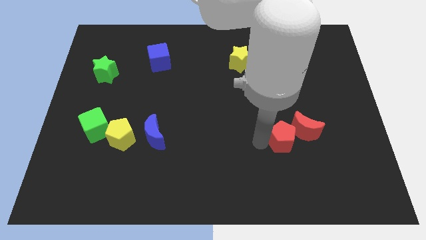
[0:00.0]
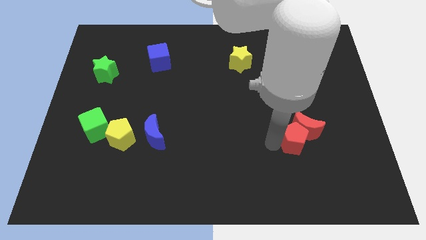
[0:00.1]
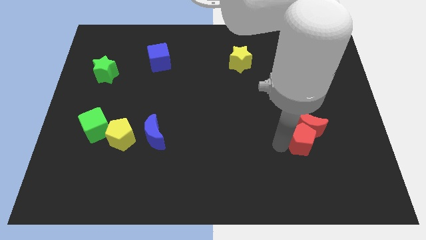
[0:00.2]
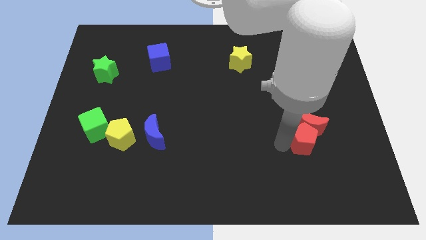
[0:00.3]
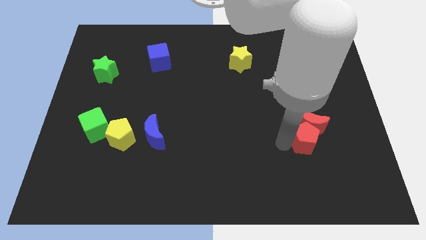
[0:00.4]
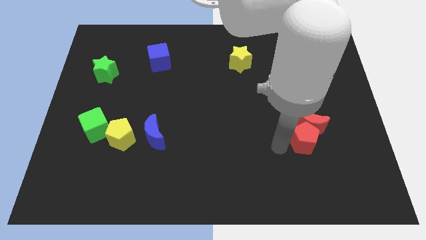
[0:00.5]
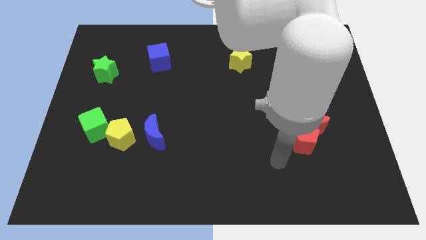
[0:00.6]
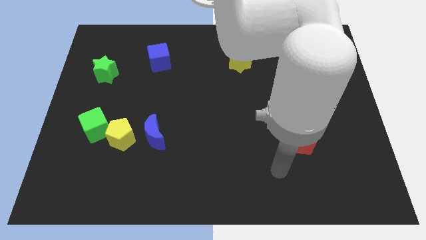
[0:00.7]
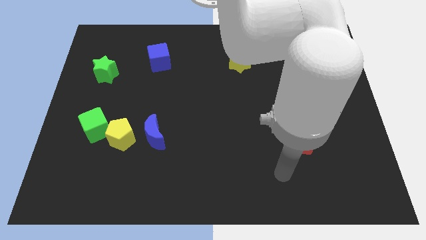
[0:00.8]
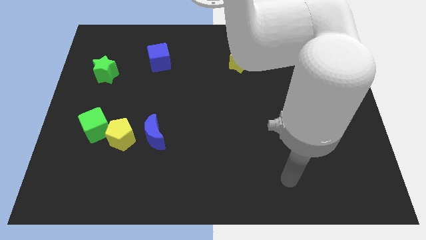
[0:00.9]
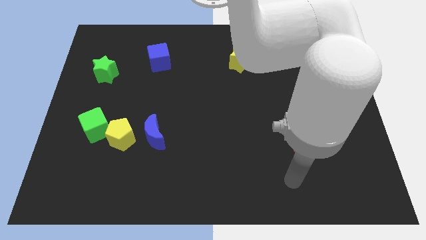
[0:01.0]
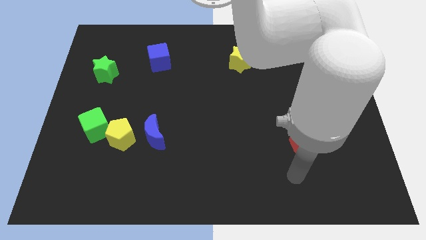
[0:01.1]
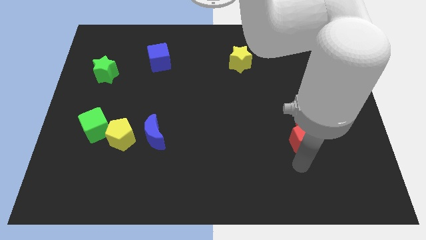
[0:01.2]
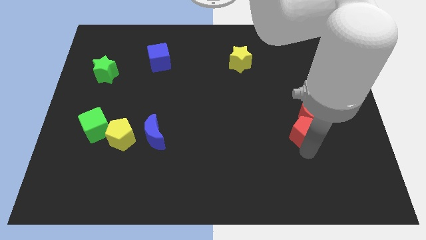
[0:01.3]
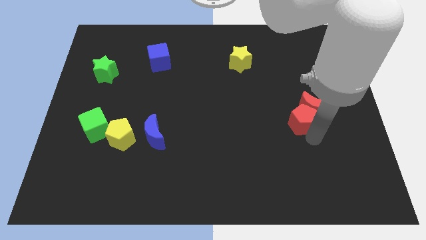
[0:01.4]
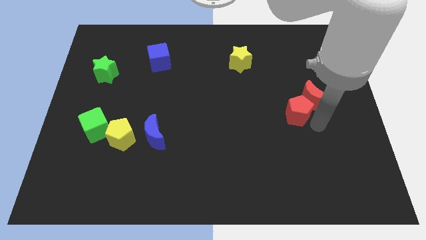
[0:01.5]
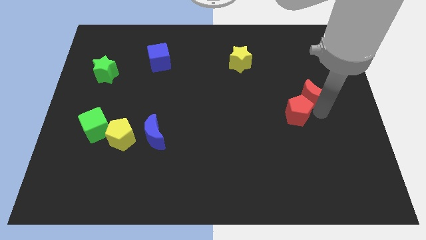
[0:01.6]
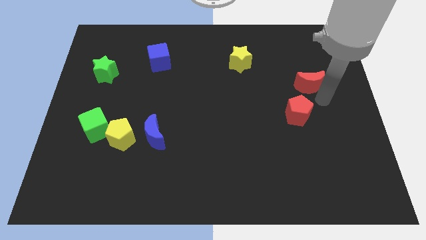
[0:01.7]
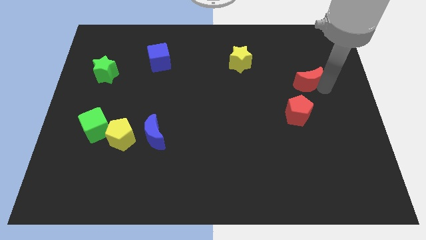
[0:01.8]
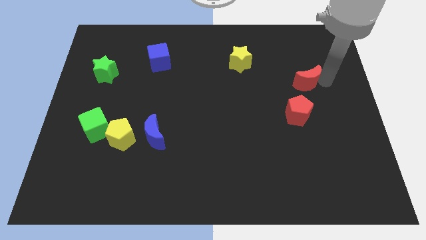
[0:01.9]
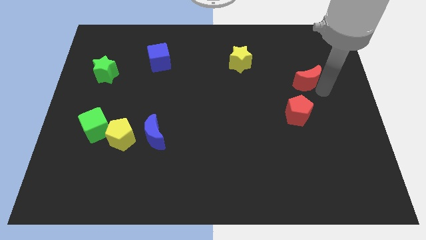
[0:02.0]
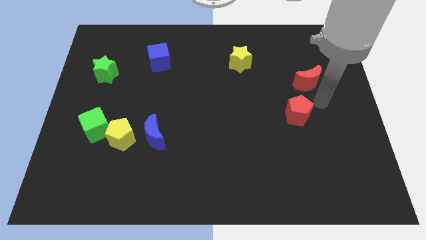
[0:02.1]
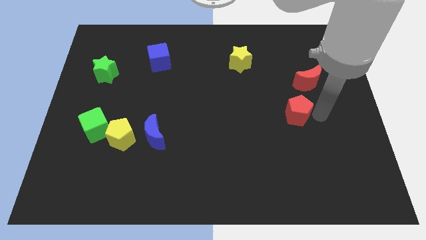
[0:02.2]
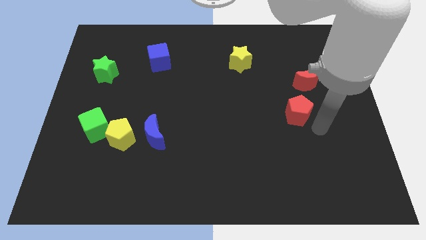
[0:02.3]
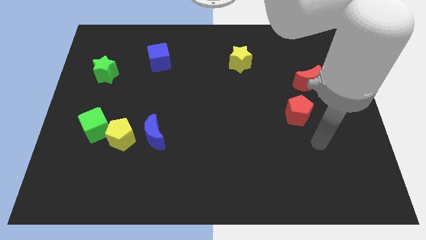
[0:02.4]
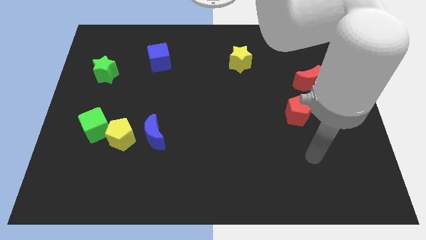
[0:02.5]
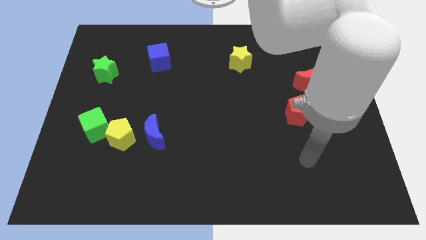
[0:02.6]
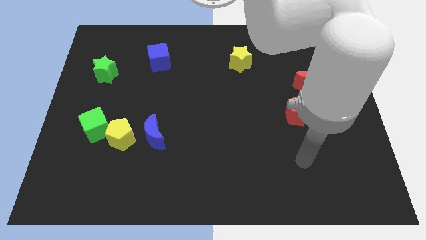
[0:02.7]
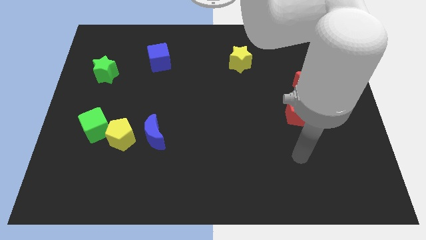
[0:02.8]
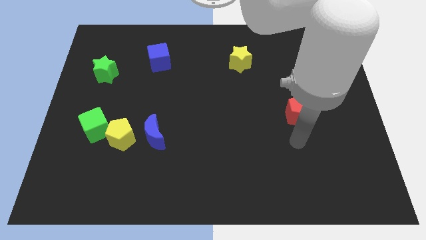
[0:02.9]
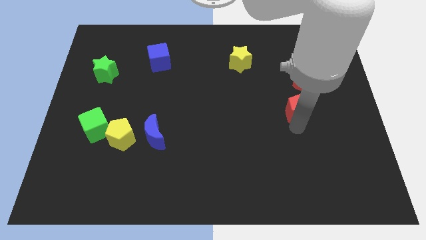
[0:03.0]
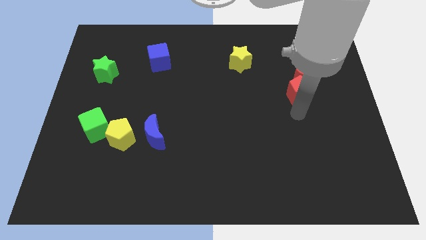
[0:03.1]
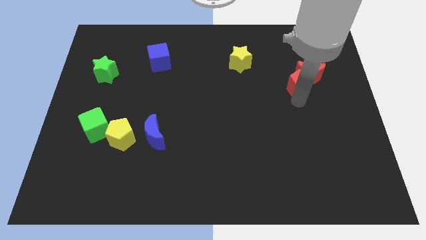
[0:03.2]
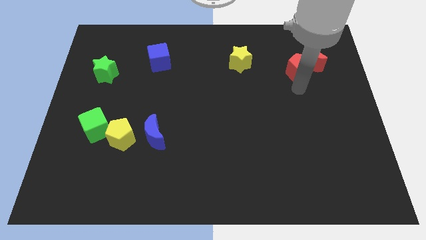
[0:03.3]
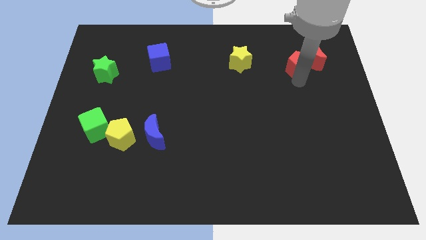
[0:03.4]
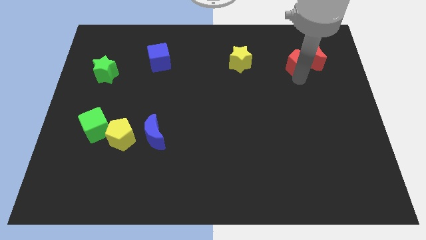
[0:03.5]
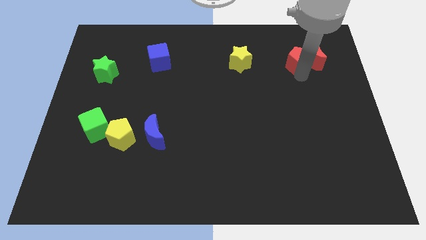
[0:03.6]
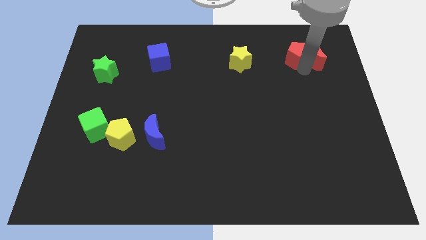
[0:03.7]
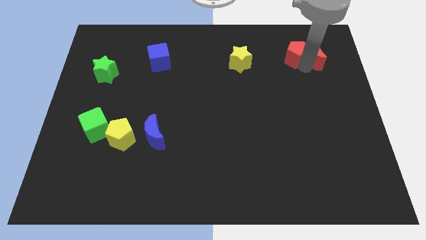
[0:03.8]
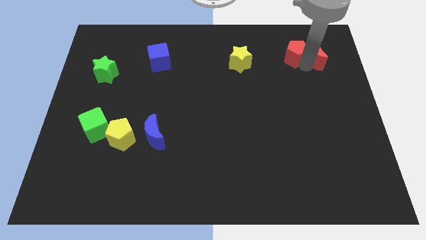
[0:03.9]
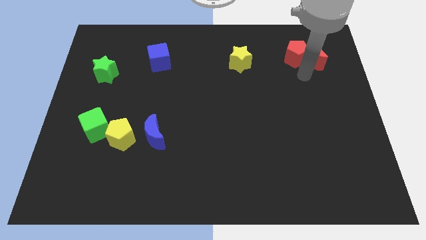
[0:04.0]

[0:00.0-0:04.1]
move red pentagon and red moon to the top right corner of the board

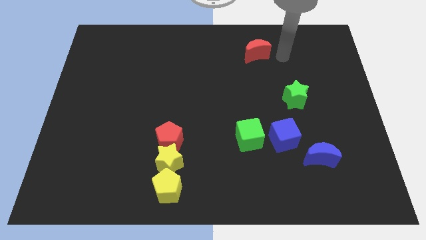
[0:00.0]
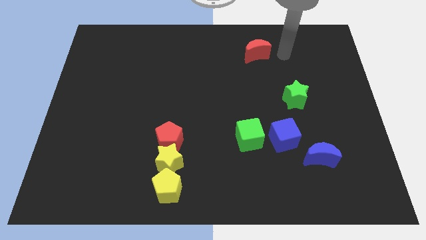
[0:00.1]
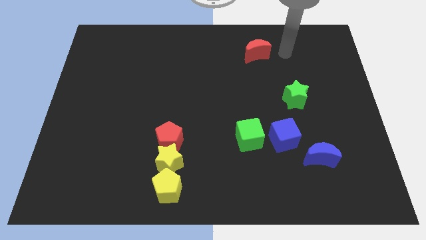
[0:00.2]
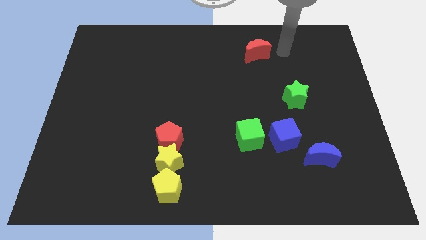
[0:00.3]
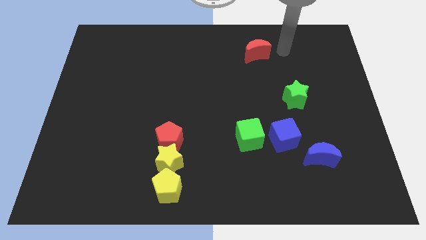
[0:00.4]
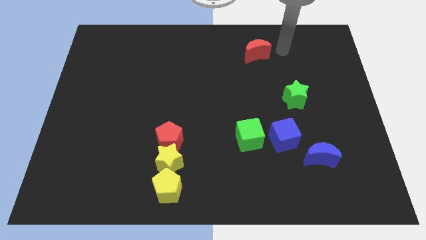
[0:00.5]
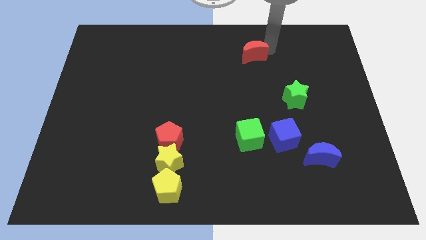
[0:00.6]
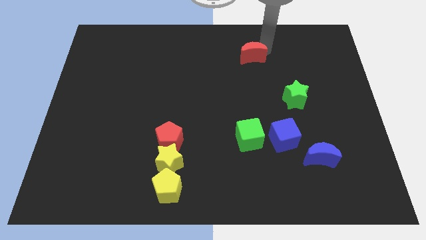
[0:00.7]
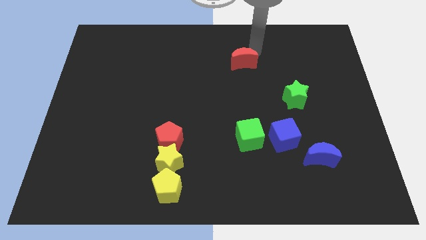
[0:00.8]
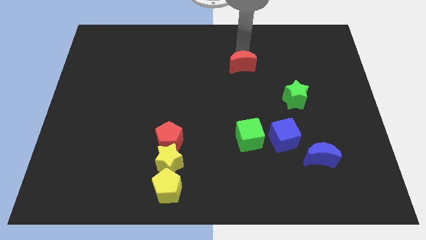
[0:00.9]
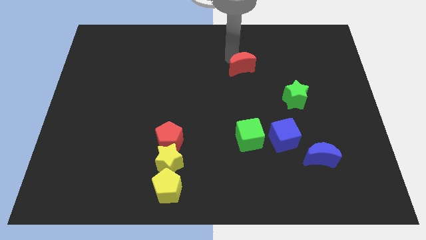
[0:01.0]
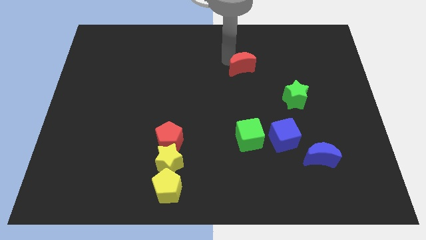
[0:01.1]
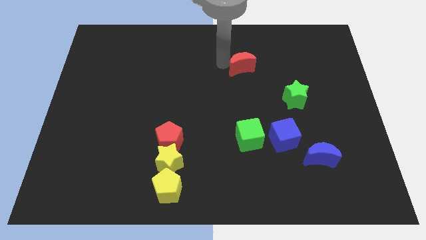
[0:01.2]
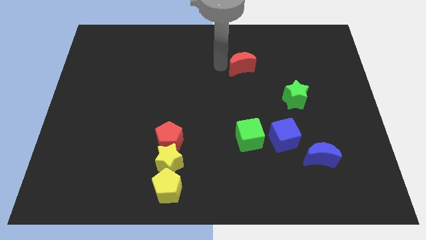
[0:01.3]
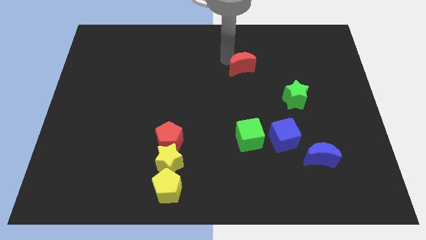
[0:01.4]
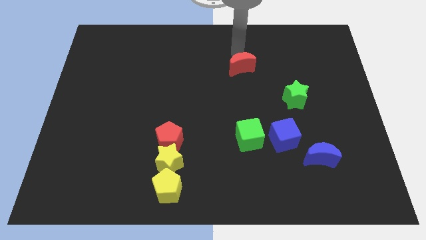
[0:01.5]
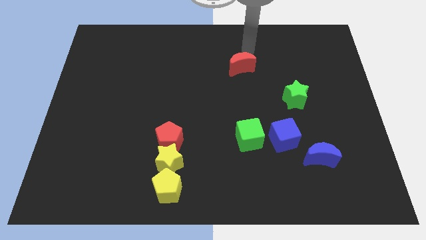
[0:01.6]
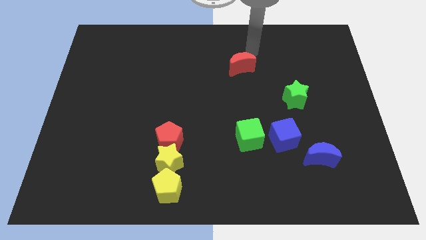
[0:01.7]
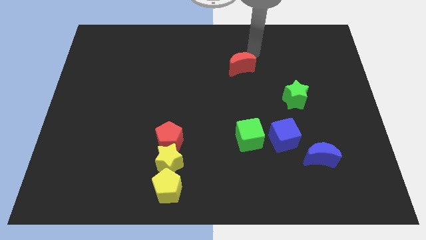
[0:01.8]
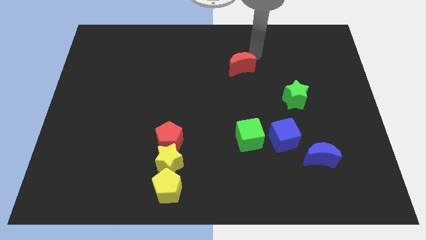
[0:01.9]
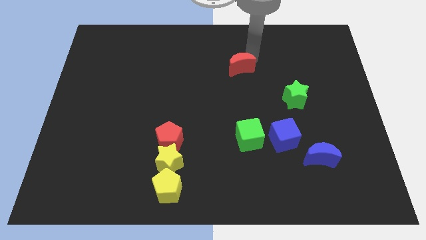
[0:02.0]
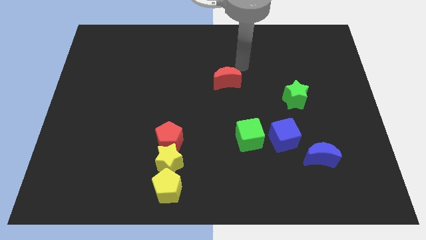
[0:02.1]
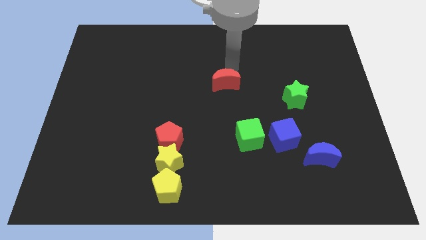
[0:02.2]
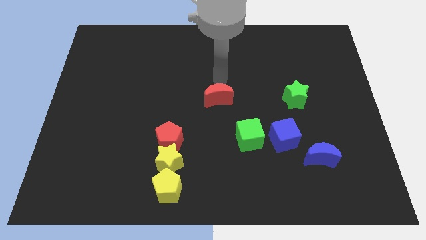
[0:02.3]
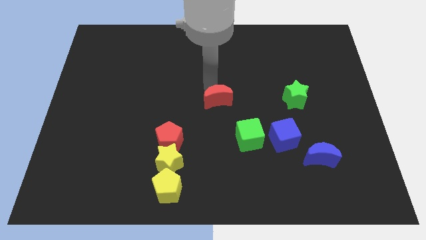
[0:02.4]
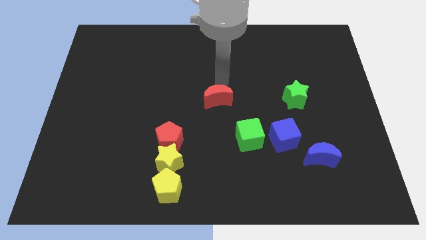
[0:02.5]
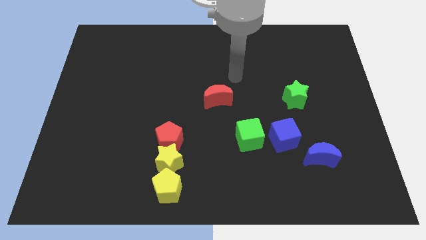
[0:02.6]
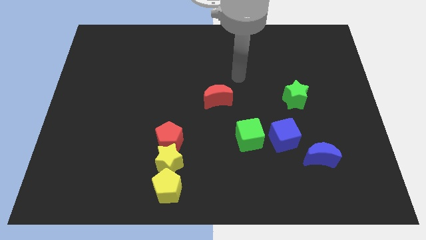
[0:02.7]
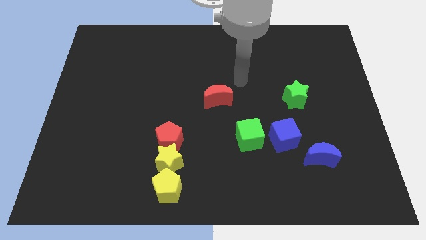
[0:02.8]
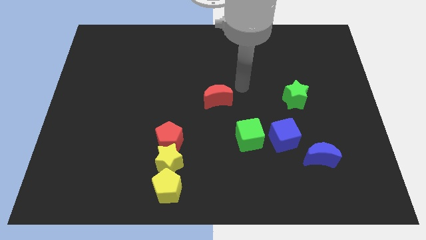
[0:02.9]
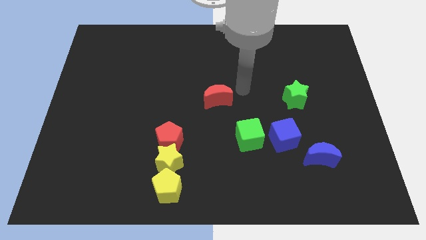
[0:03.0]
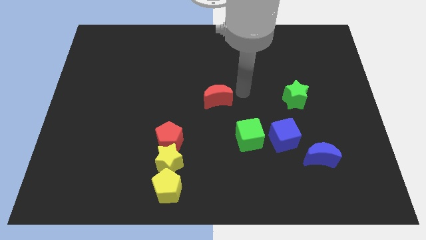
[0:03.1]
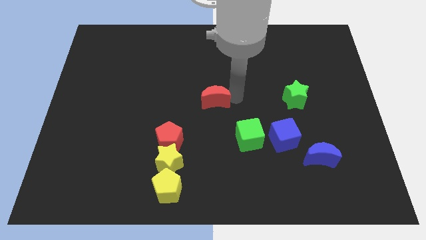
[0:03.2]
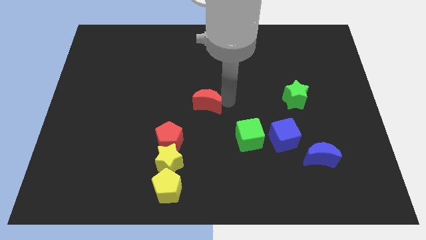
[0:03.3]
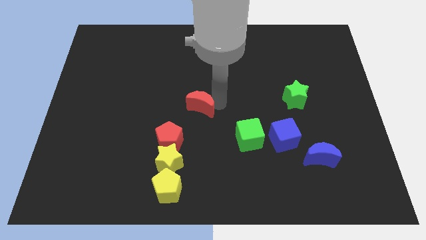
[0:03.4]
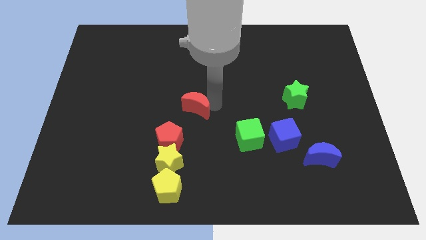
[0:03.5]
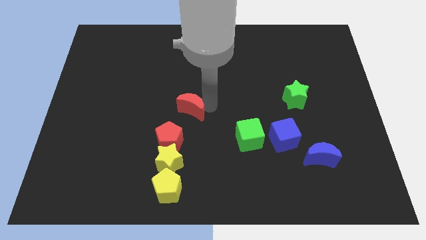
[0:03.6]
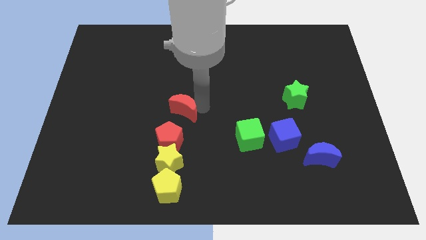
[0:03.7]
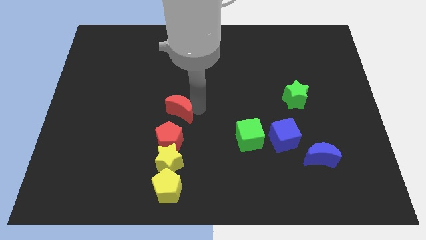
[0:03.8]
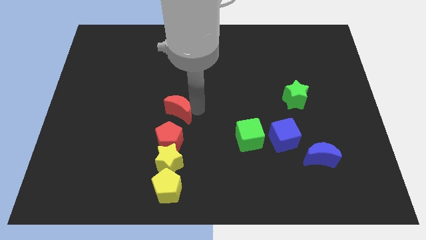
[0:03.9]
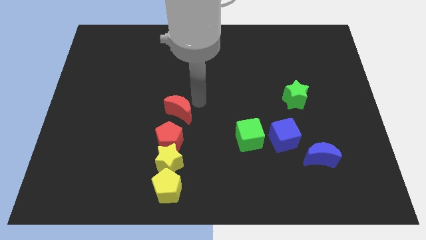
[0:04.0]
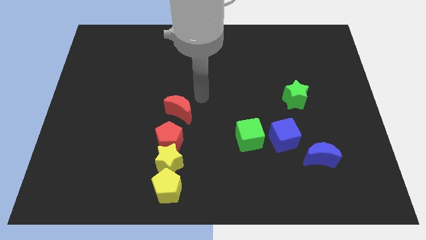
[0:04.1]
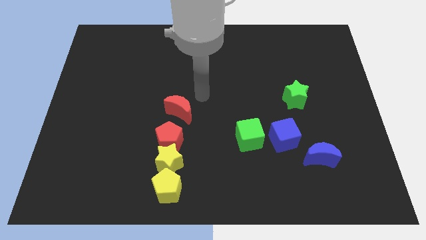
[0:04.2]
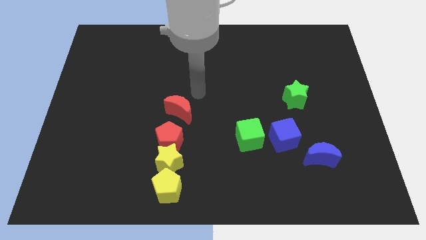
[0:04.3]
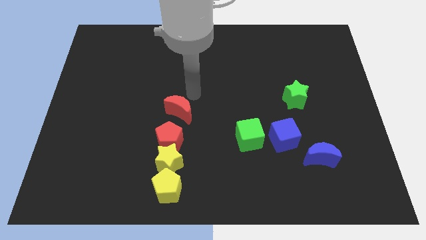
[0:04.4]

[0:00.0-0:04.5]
place the red moon above the red pentagon
